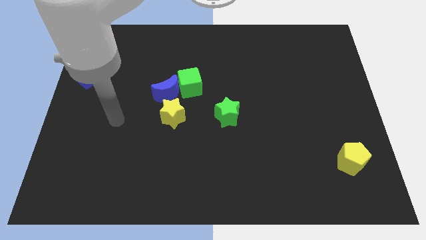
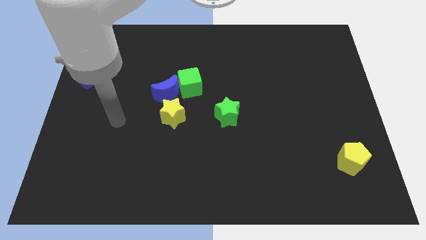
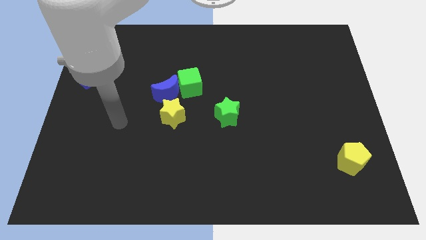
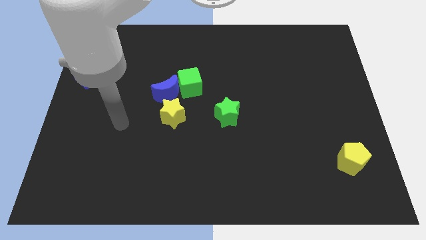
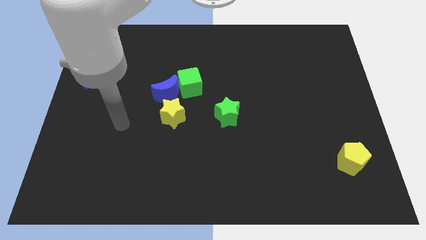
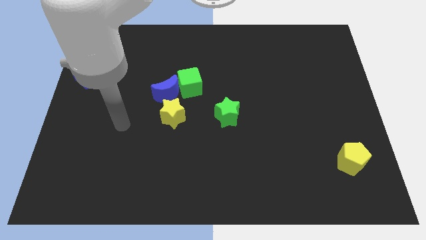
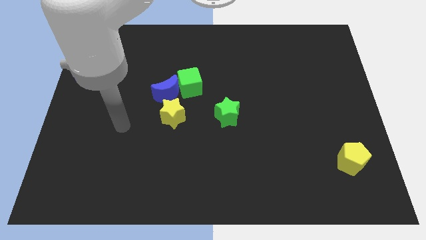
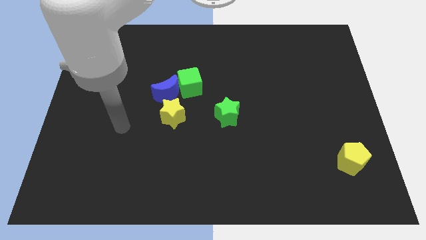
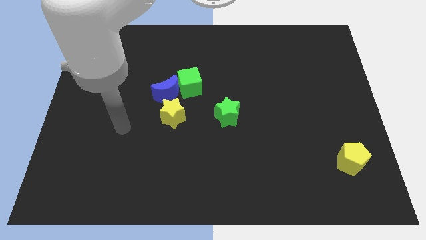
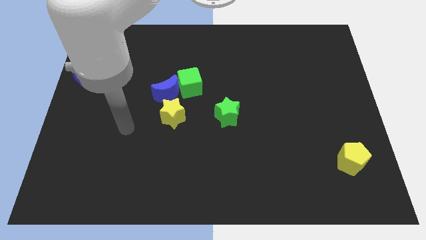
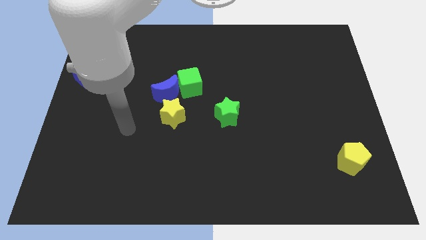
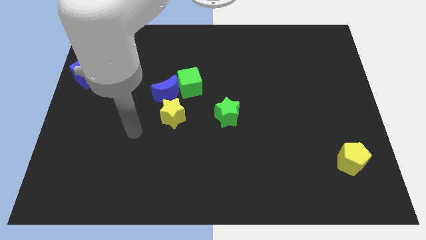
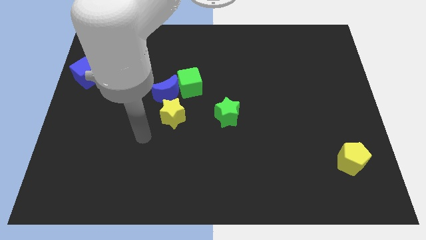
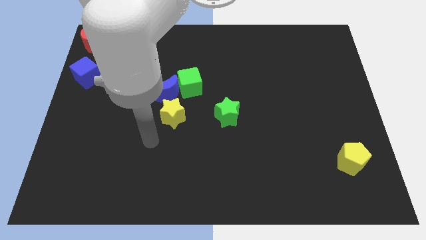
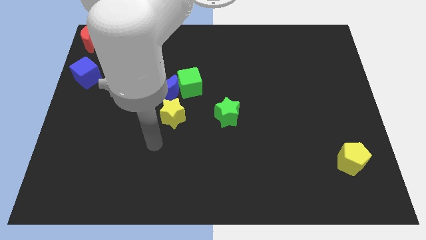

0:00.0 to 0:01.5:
slide your arm to the bottom of the yellow star

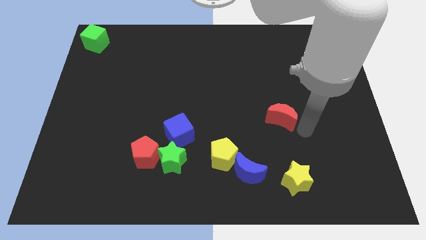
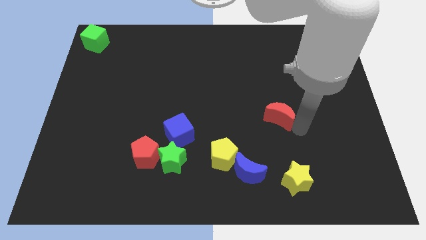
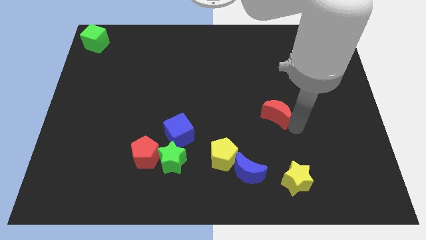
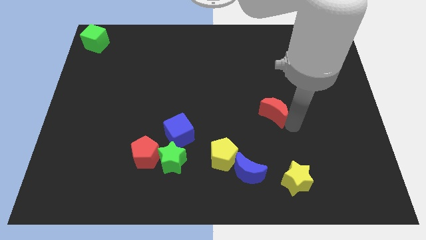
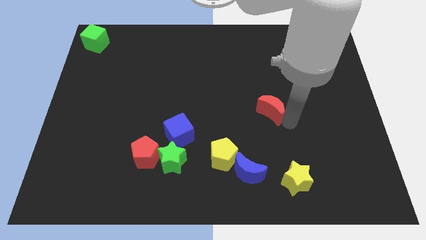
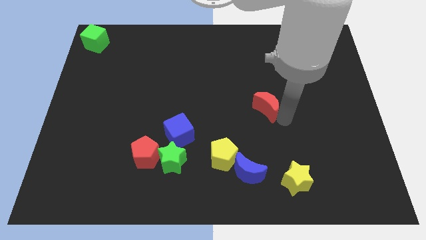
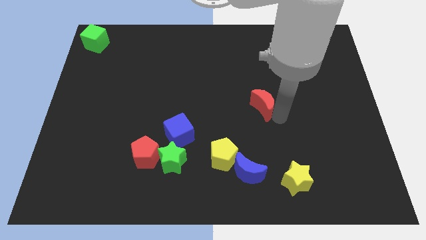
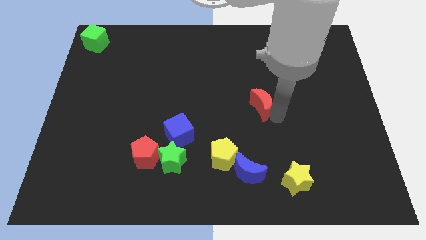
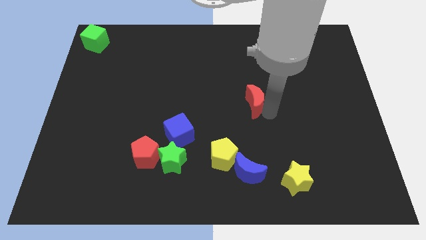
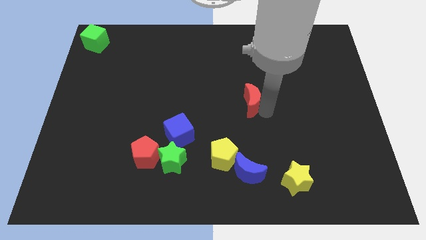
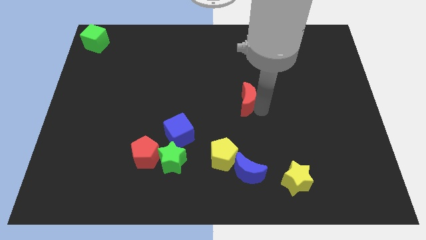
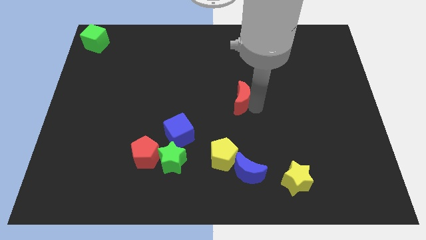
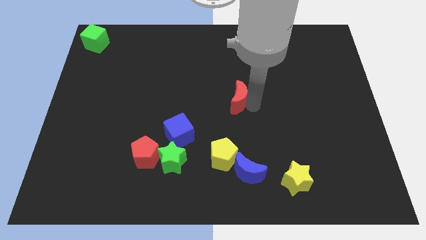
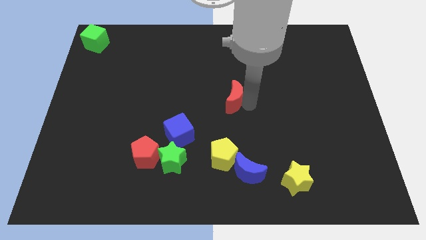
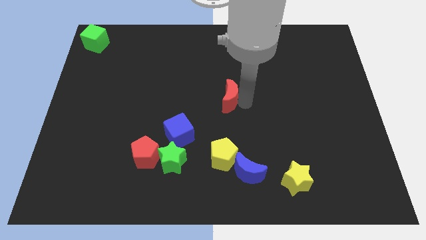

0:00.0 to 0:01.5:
place the red moon diagonally to the yellow star

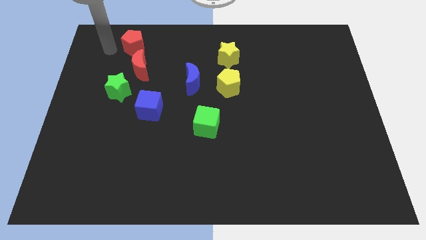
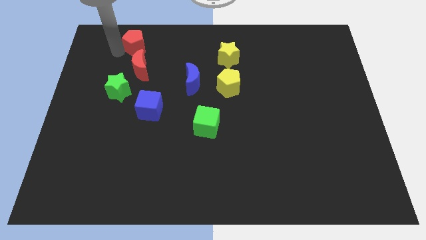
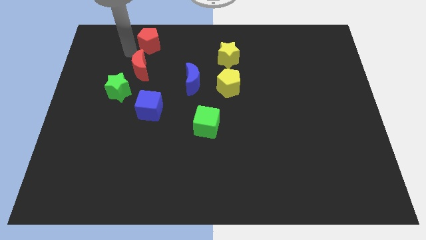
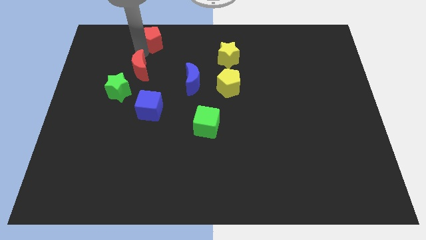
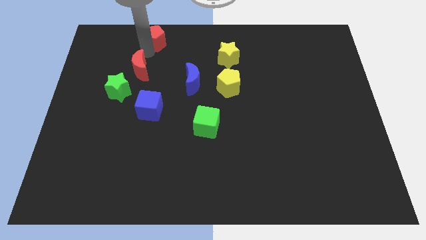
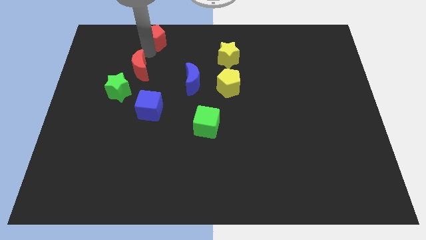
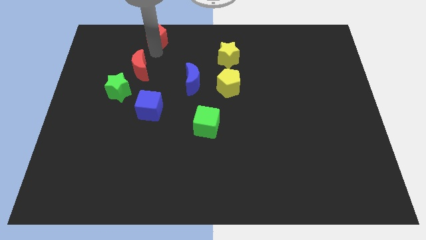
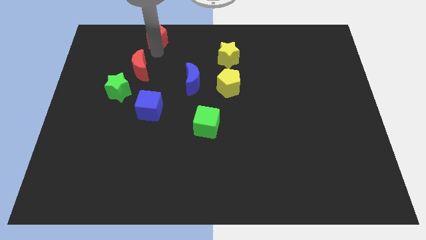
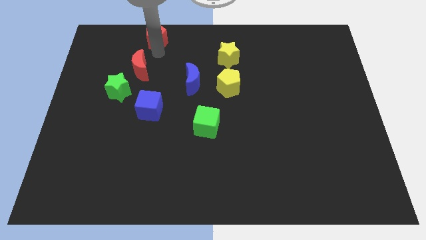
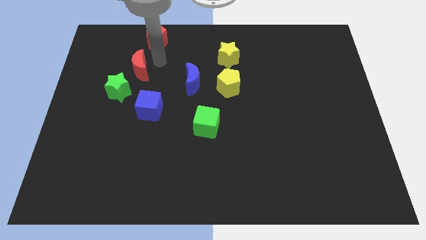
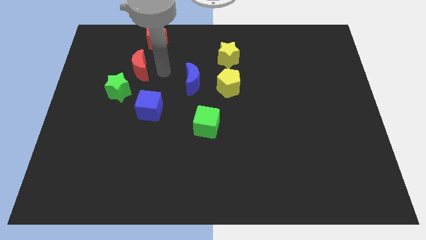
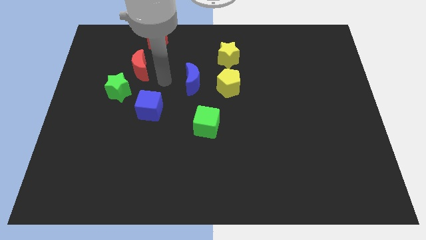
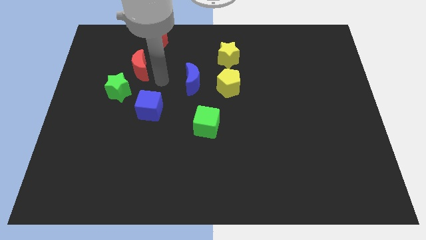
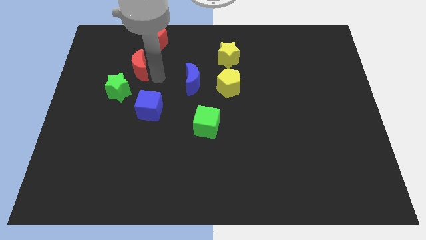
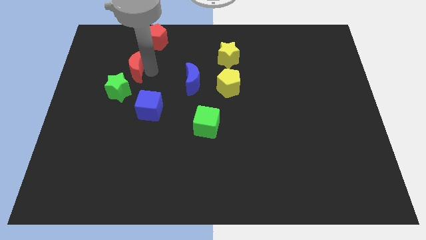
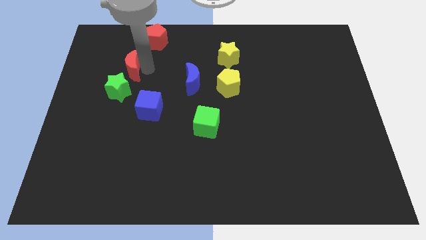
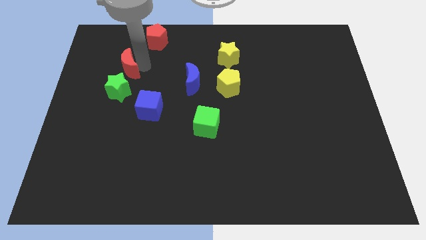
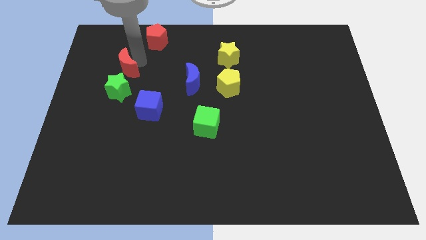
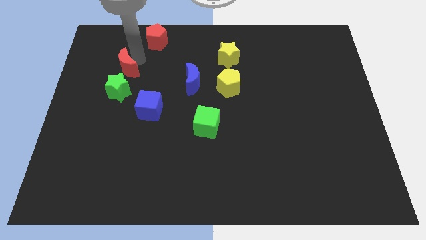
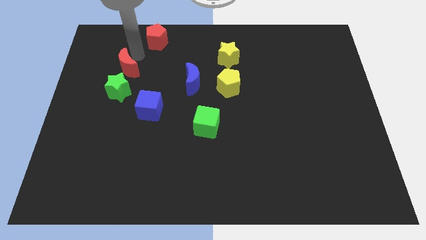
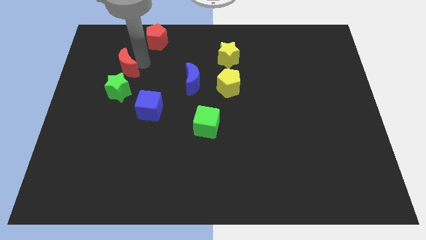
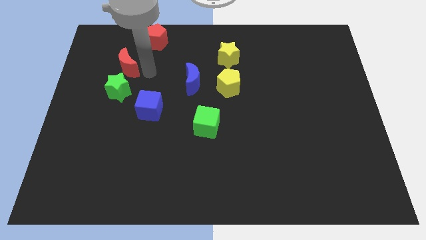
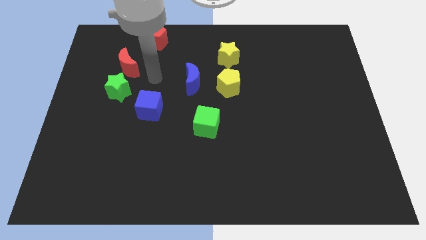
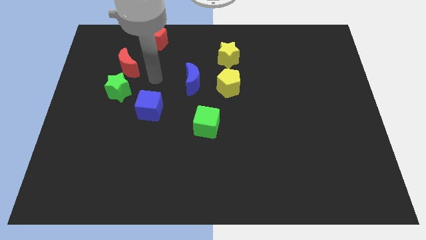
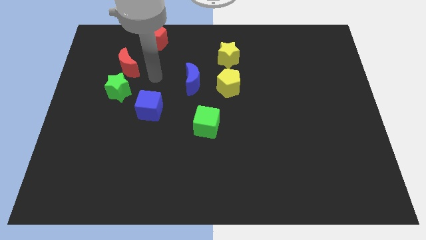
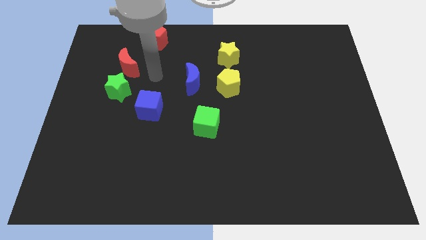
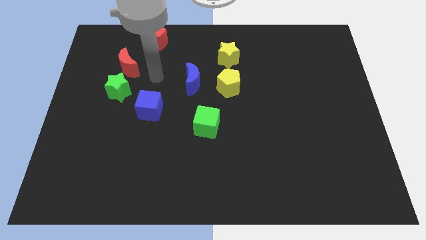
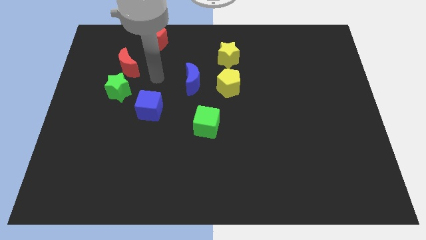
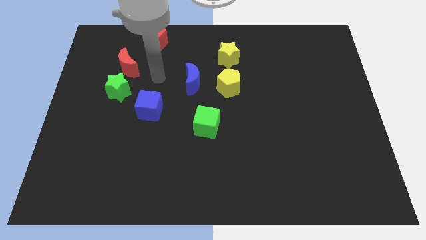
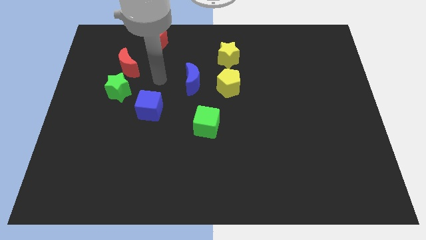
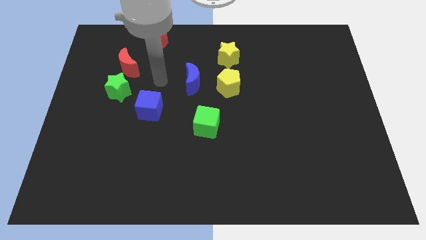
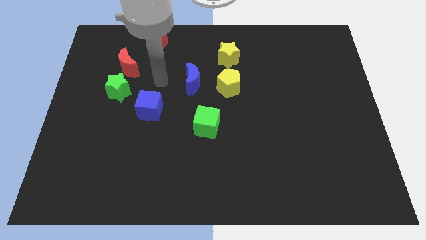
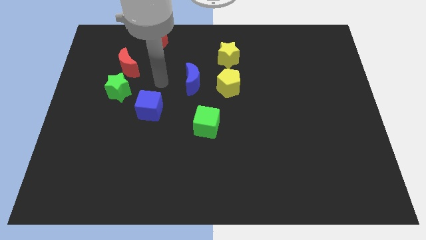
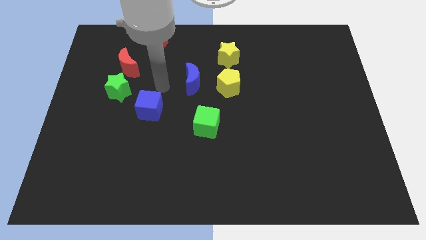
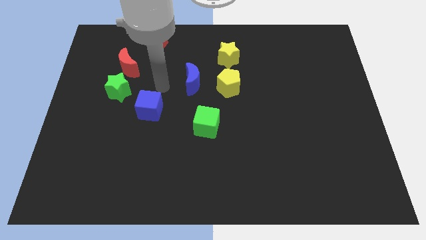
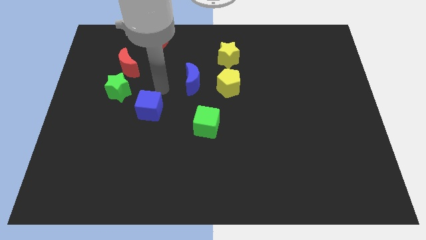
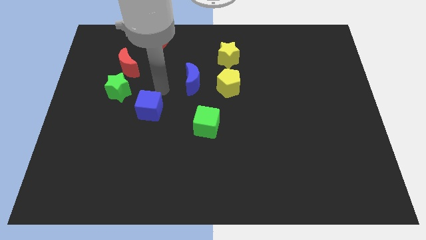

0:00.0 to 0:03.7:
move the red blocks in the opposite direction

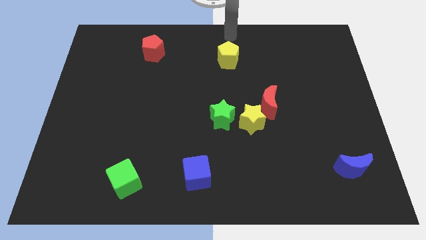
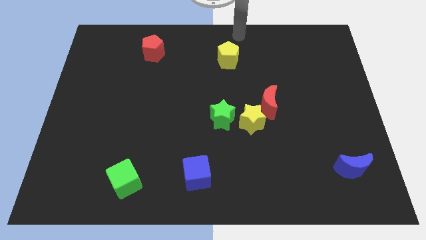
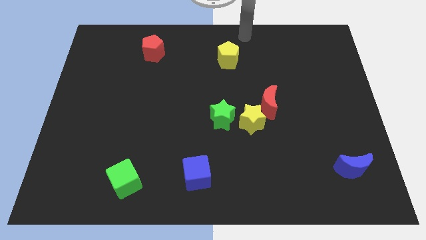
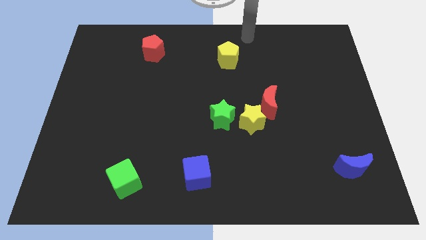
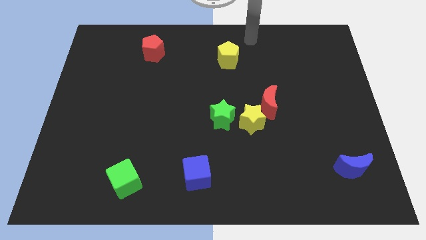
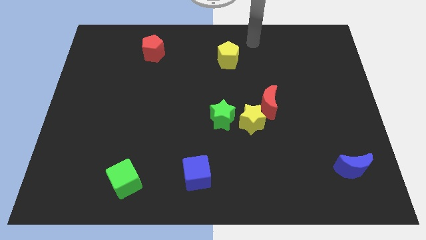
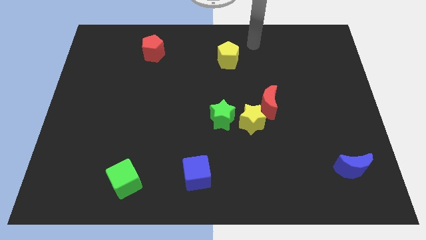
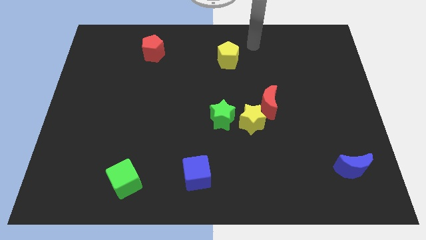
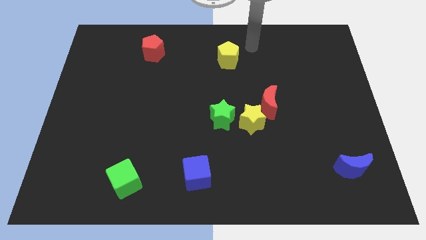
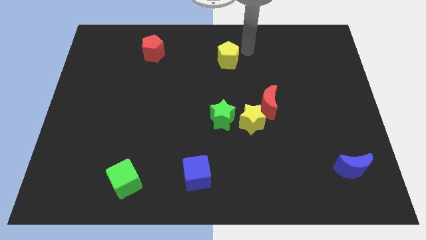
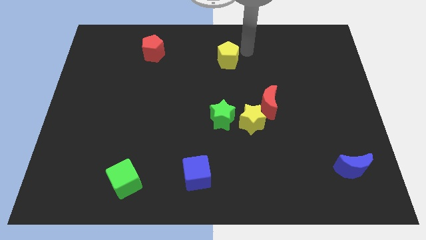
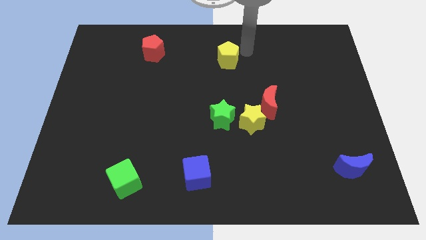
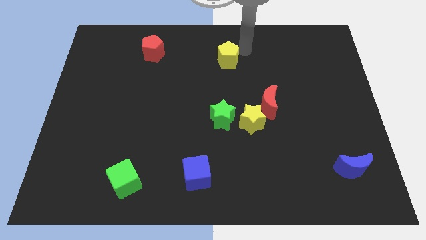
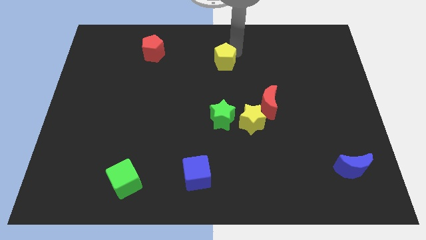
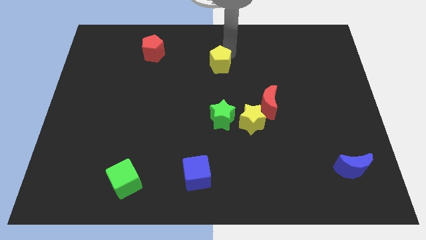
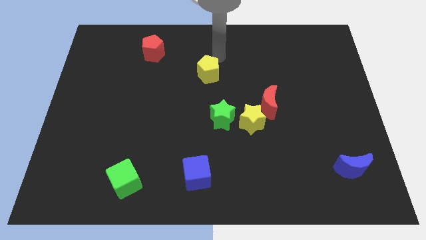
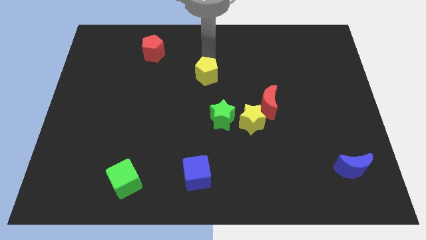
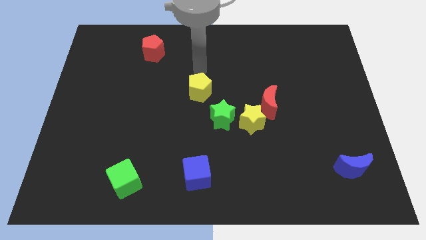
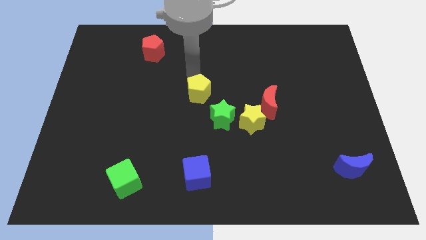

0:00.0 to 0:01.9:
push the yellow pentagon slightly to the bottom

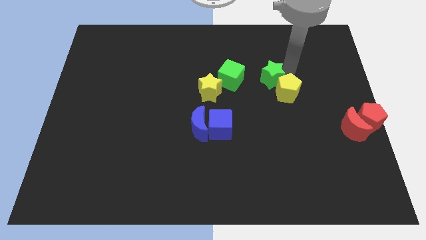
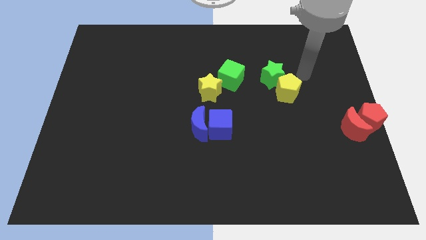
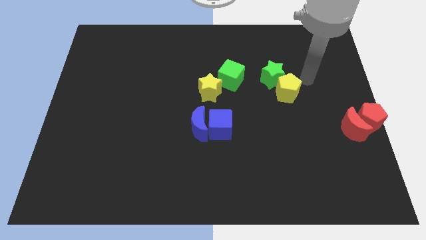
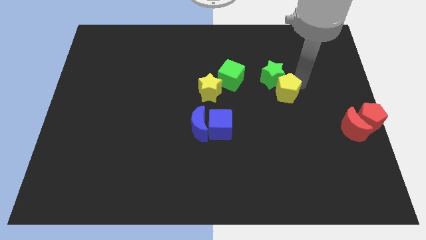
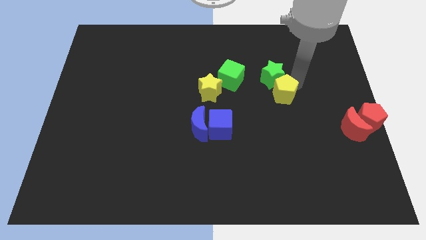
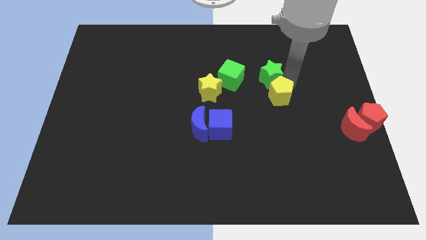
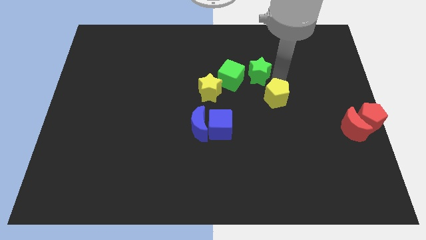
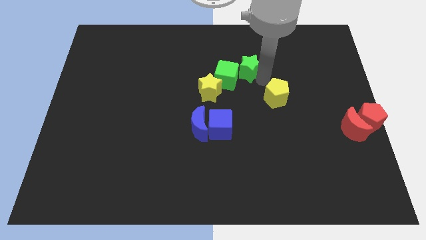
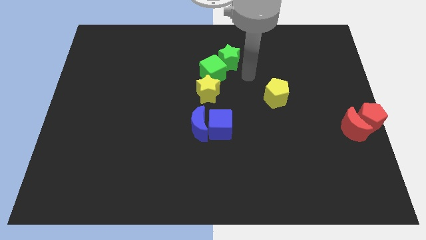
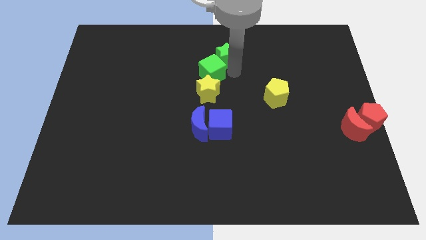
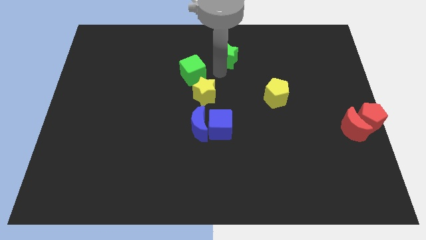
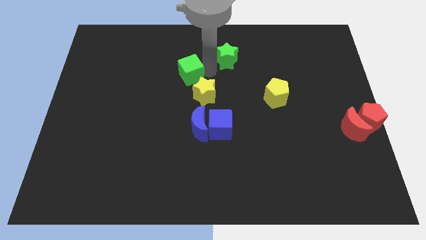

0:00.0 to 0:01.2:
separate green star and yellow pentagon
